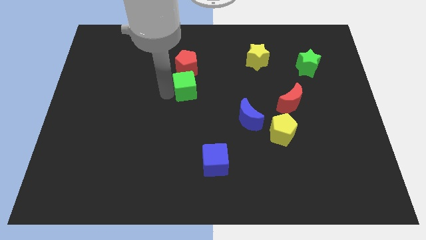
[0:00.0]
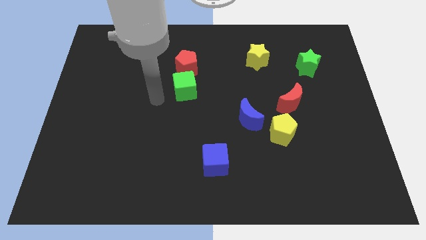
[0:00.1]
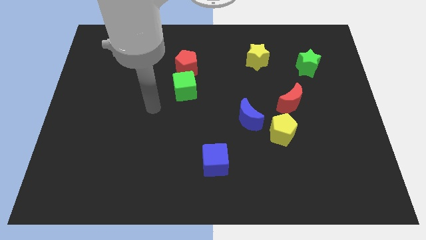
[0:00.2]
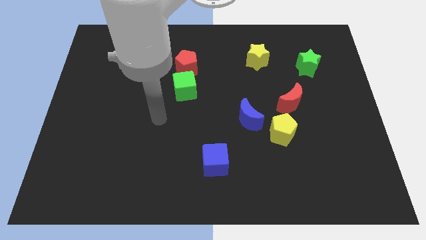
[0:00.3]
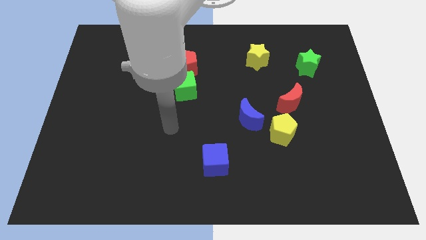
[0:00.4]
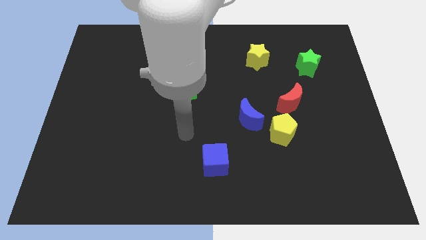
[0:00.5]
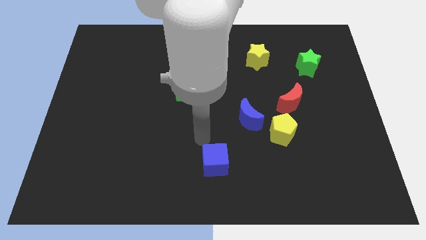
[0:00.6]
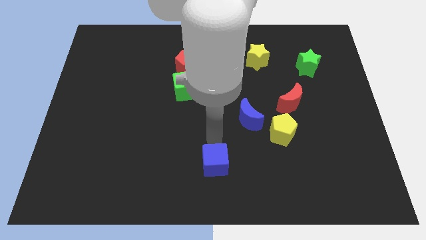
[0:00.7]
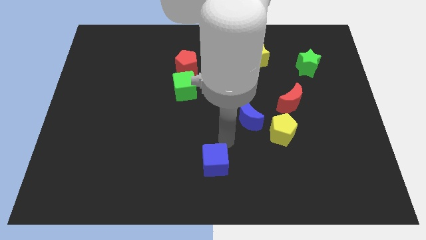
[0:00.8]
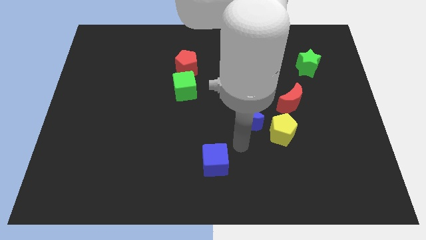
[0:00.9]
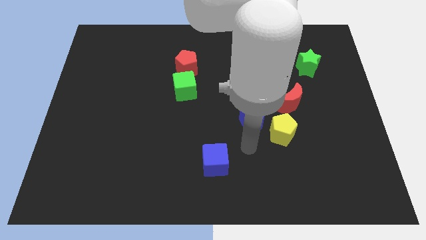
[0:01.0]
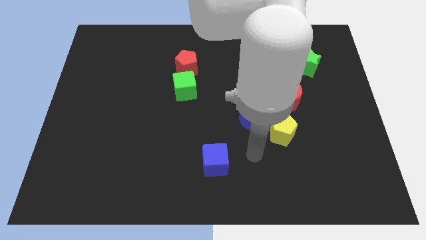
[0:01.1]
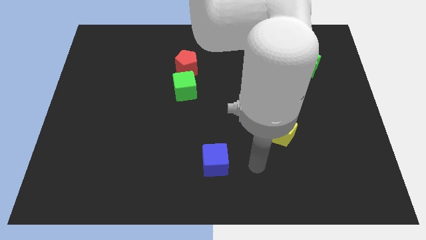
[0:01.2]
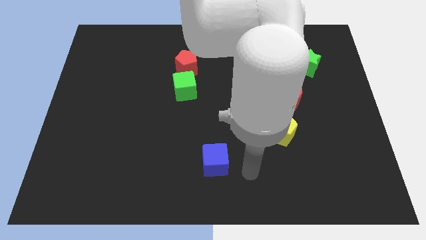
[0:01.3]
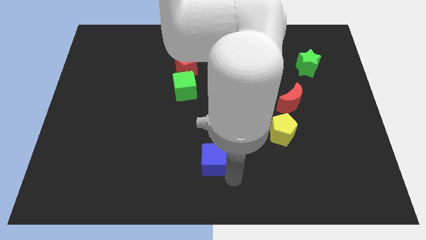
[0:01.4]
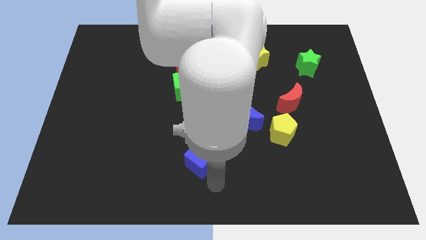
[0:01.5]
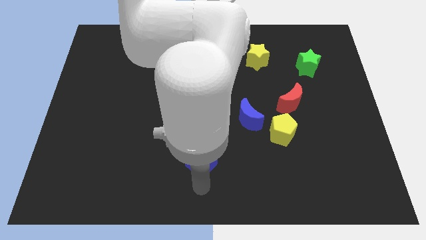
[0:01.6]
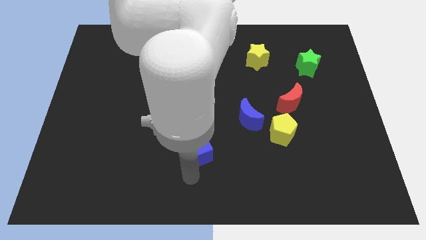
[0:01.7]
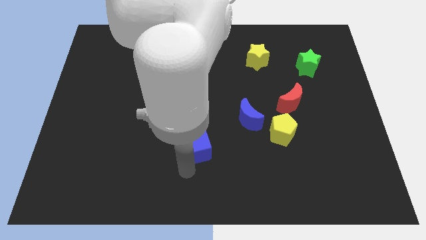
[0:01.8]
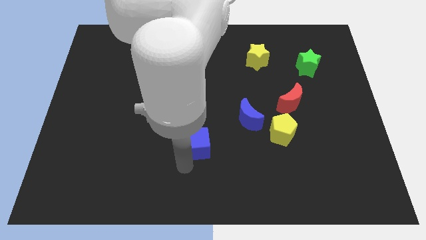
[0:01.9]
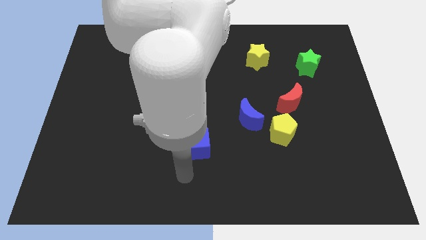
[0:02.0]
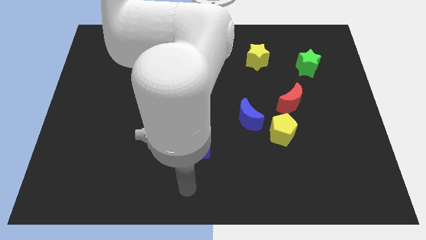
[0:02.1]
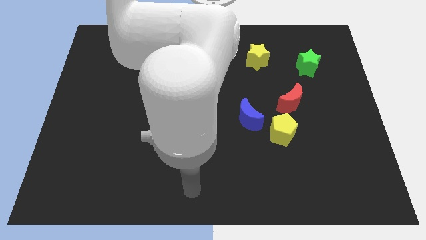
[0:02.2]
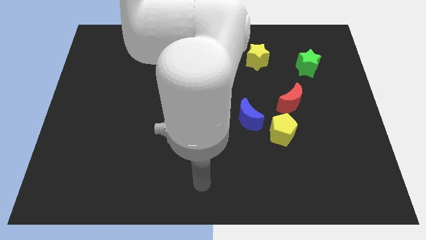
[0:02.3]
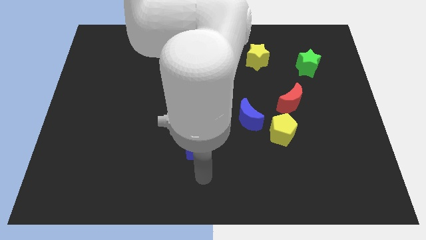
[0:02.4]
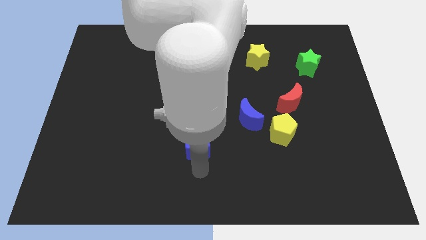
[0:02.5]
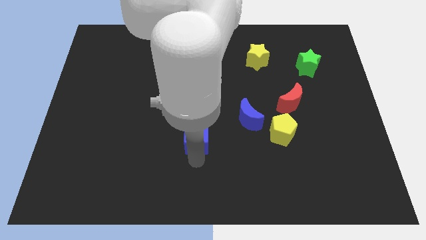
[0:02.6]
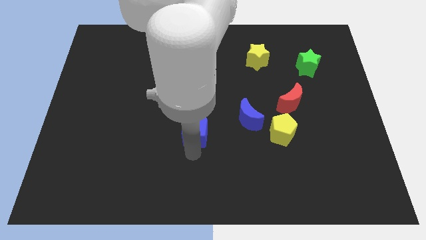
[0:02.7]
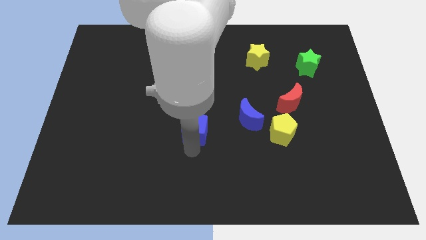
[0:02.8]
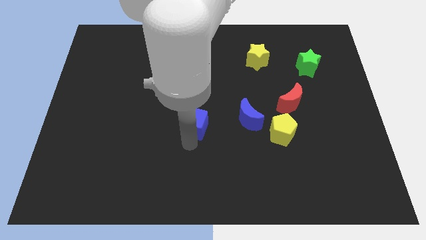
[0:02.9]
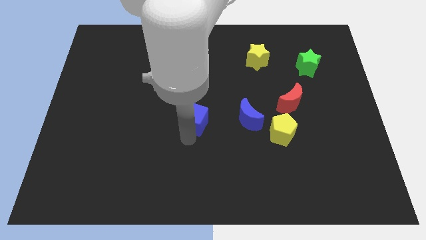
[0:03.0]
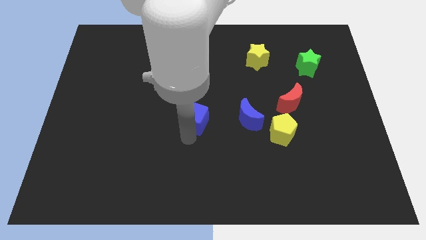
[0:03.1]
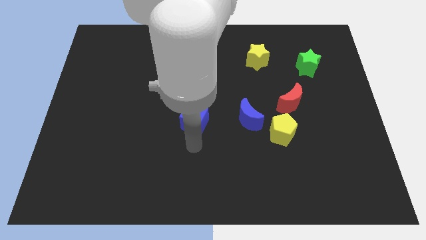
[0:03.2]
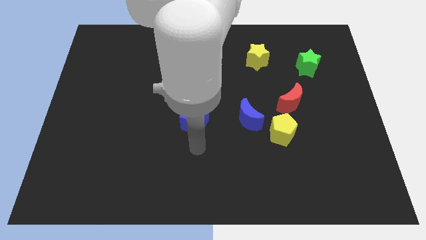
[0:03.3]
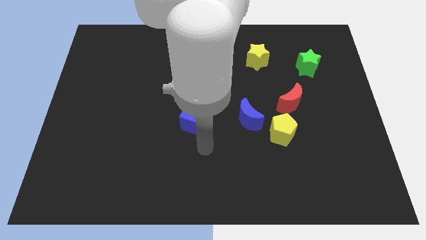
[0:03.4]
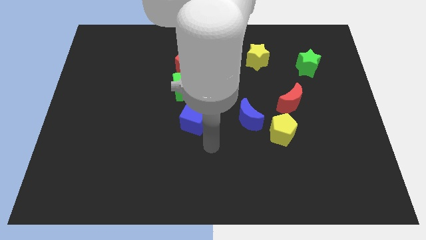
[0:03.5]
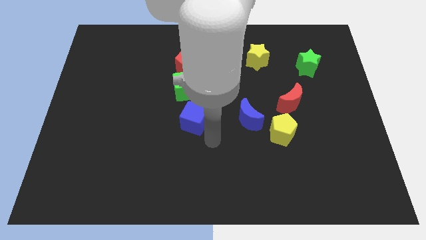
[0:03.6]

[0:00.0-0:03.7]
place blue cube to the bottom of green cube

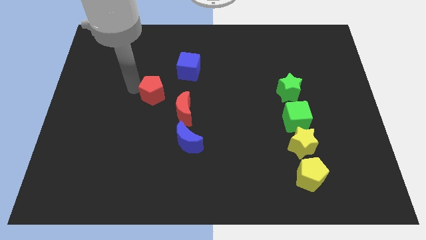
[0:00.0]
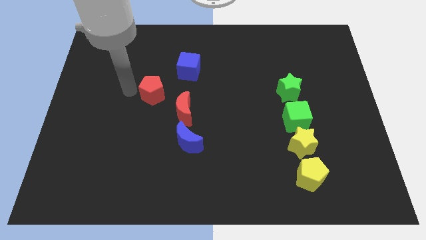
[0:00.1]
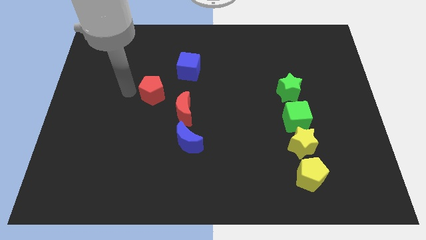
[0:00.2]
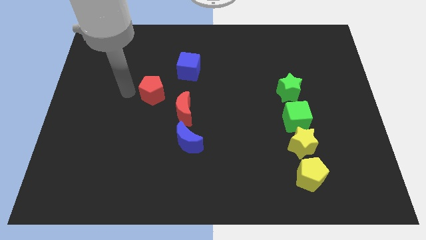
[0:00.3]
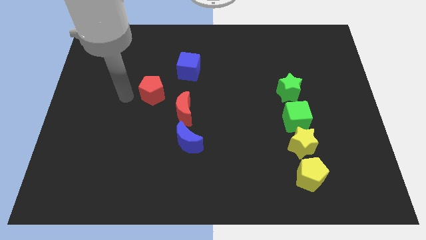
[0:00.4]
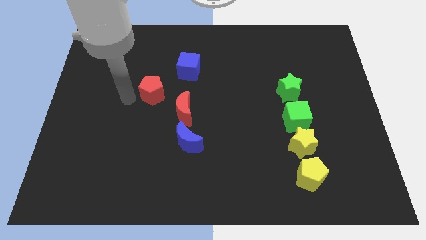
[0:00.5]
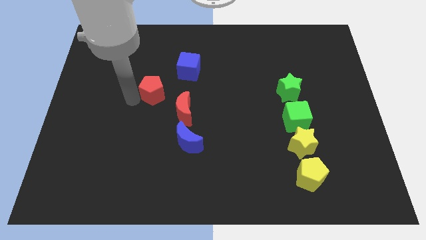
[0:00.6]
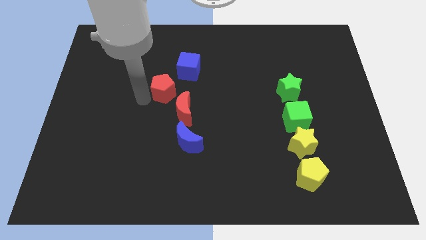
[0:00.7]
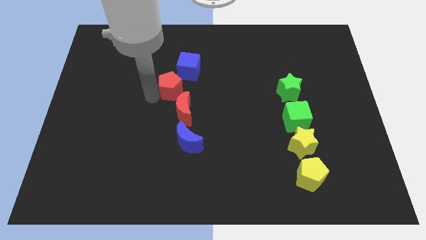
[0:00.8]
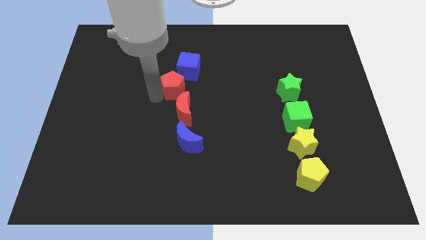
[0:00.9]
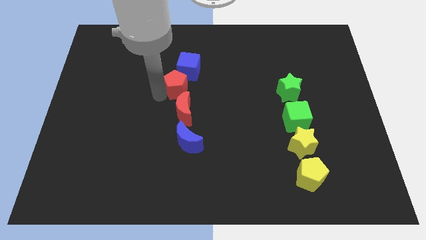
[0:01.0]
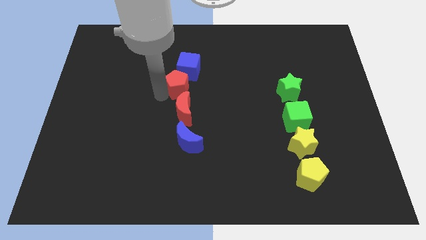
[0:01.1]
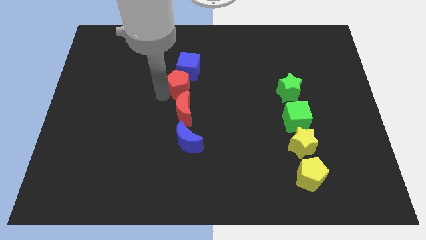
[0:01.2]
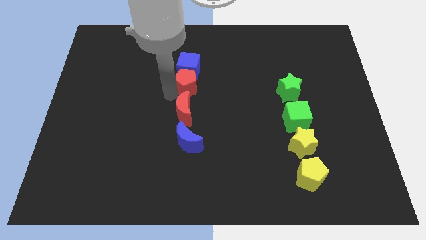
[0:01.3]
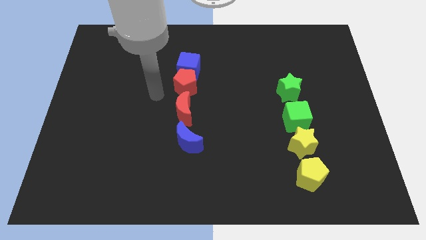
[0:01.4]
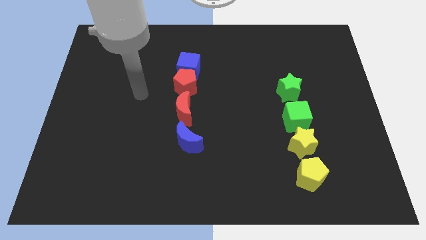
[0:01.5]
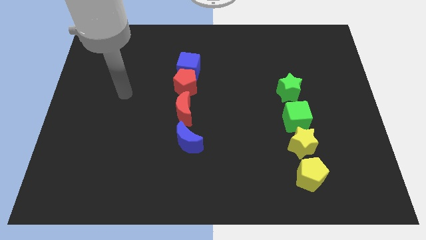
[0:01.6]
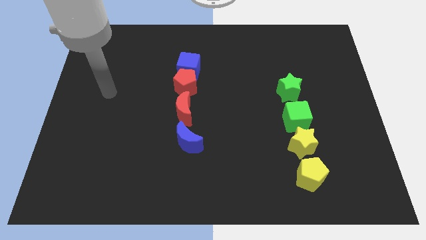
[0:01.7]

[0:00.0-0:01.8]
move the red pentagon to the bottom of the blue cube

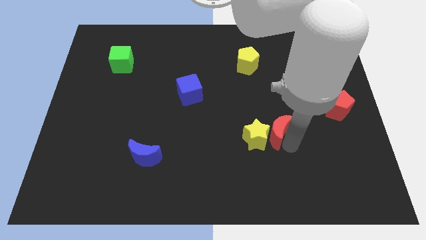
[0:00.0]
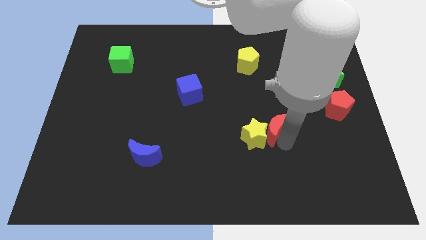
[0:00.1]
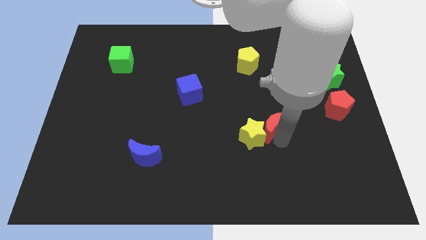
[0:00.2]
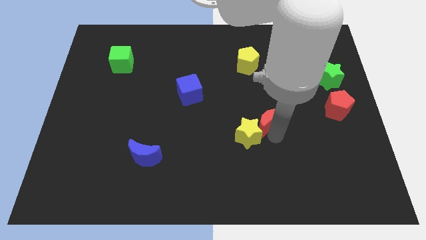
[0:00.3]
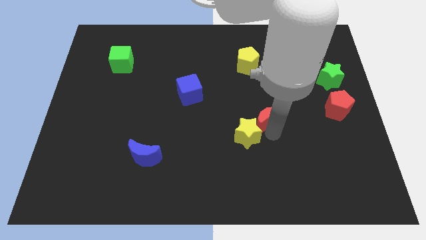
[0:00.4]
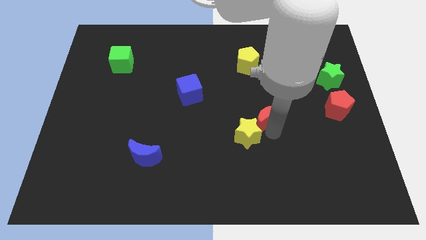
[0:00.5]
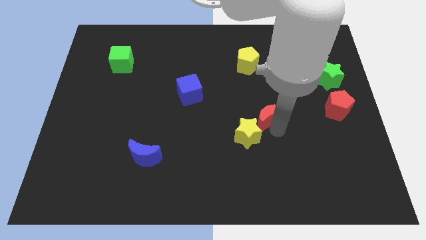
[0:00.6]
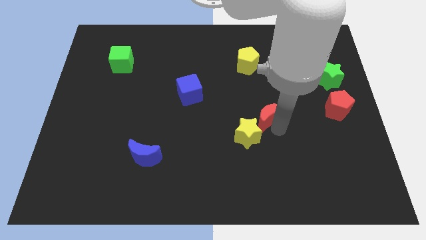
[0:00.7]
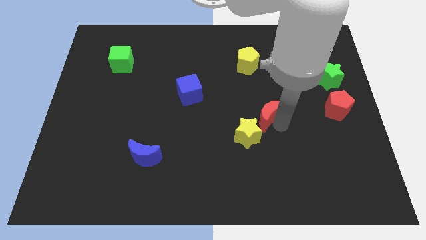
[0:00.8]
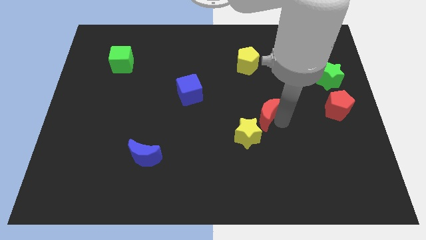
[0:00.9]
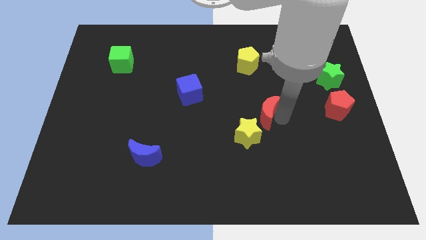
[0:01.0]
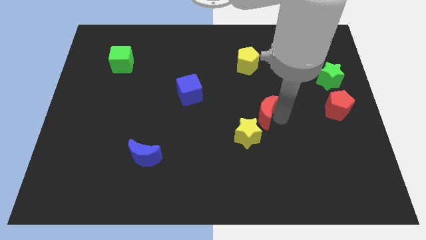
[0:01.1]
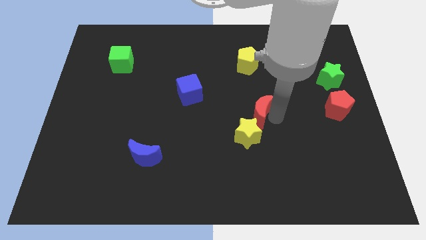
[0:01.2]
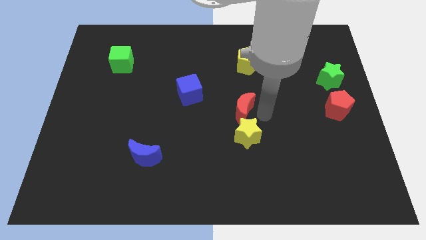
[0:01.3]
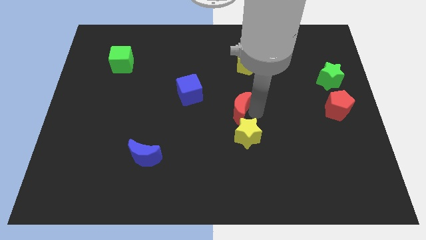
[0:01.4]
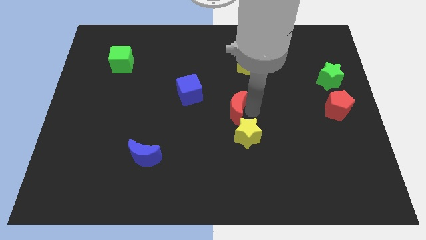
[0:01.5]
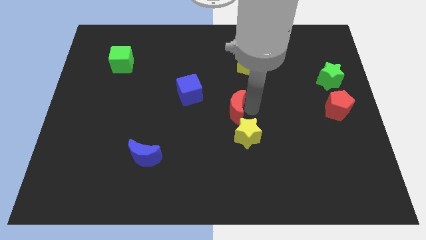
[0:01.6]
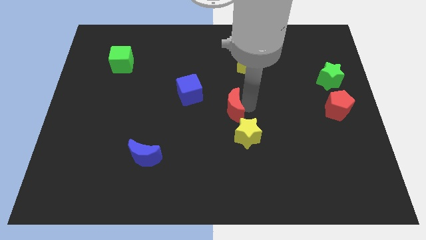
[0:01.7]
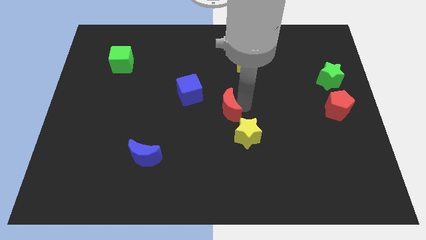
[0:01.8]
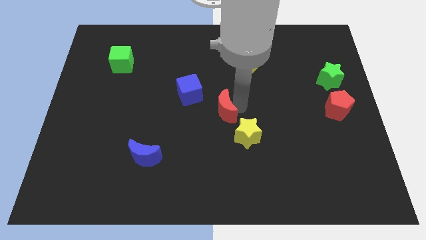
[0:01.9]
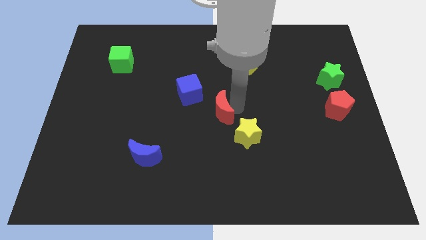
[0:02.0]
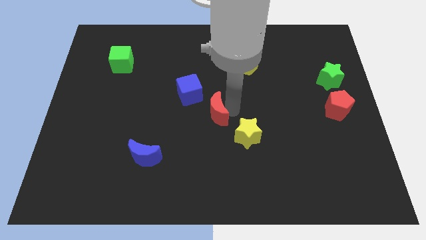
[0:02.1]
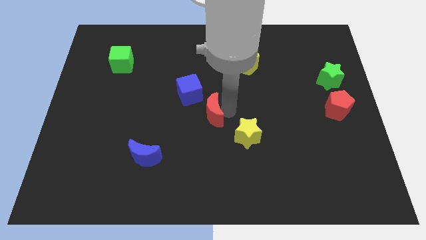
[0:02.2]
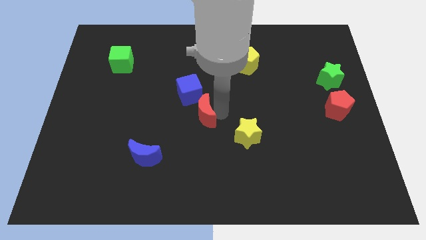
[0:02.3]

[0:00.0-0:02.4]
push the red moon towards the bottom right of the blue cube

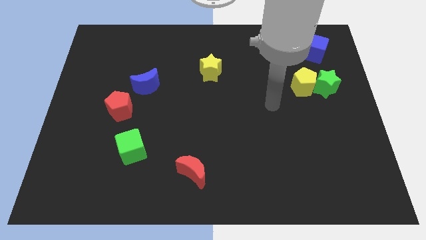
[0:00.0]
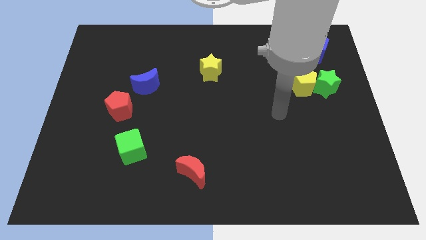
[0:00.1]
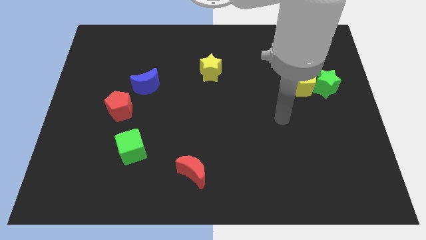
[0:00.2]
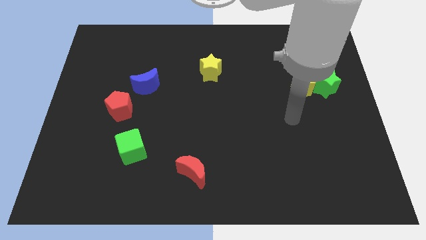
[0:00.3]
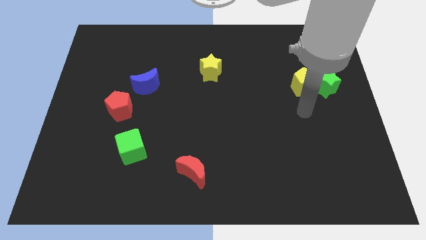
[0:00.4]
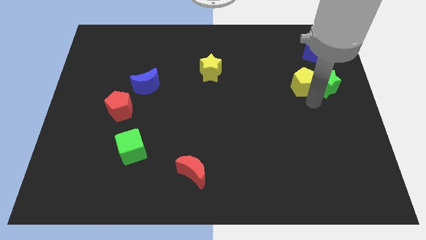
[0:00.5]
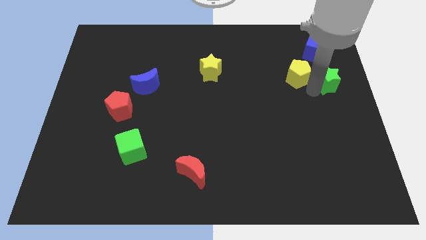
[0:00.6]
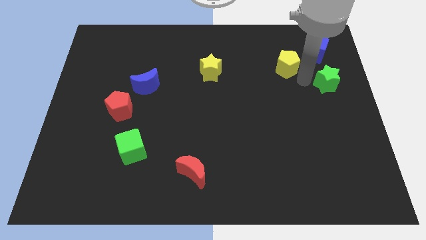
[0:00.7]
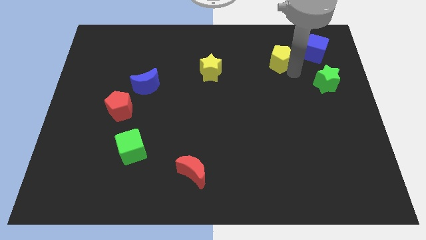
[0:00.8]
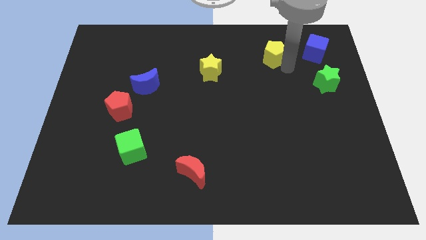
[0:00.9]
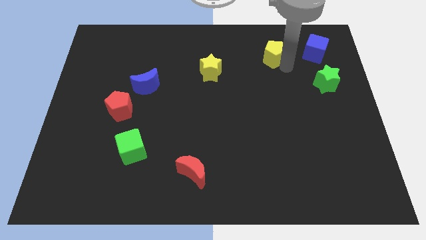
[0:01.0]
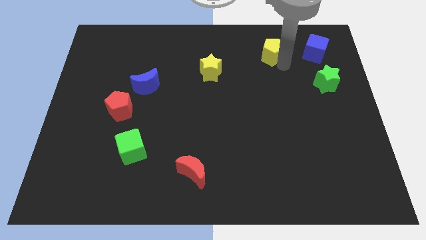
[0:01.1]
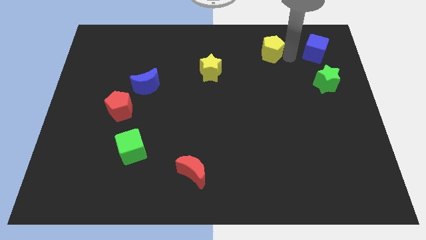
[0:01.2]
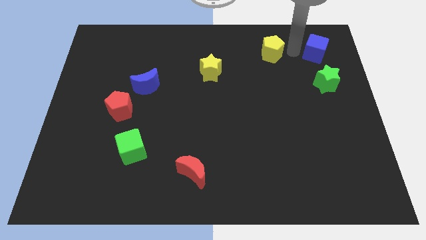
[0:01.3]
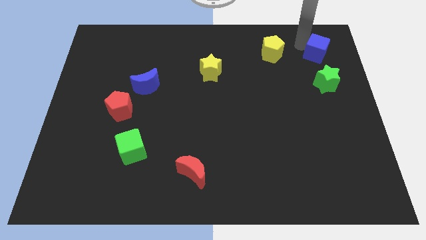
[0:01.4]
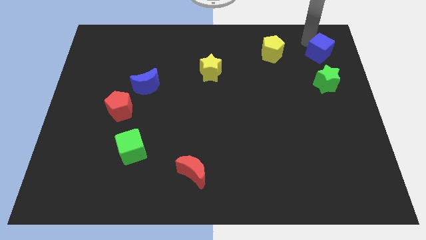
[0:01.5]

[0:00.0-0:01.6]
move the blue cube at the top of the green star
